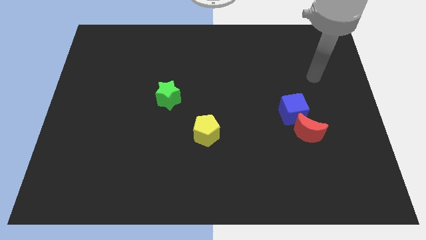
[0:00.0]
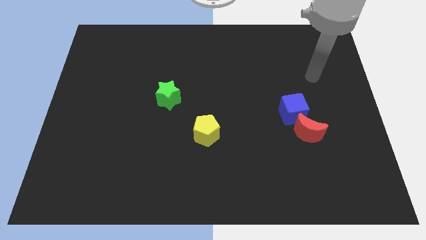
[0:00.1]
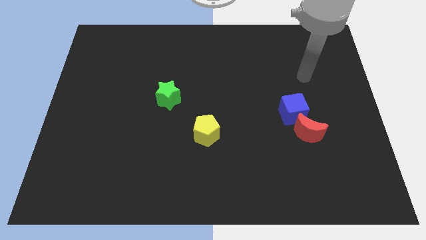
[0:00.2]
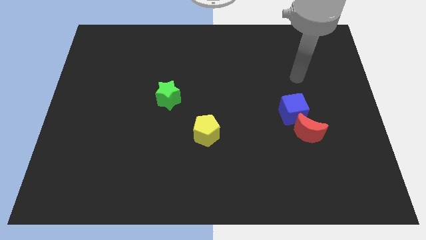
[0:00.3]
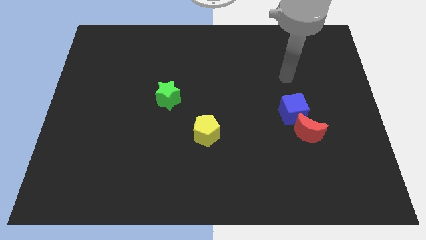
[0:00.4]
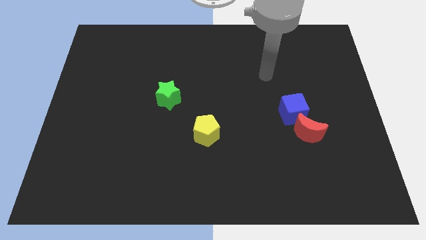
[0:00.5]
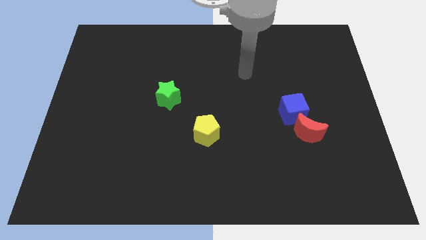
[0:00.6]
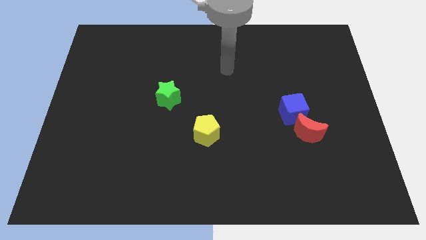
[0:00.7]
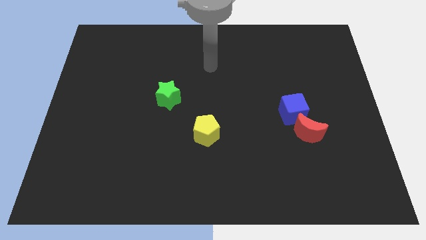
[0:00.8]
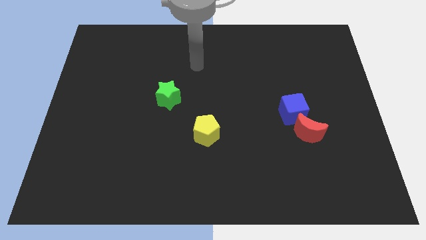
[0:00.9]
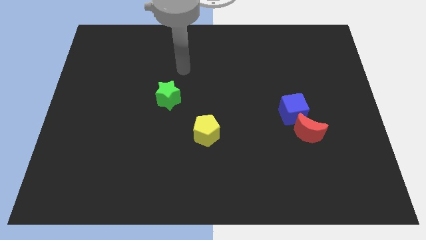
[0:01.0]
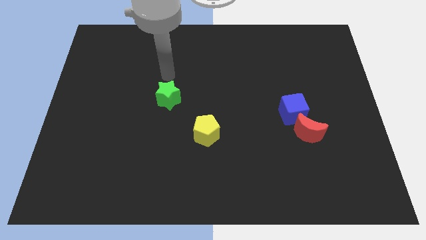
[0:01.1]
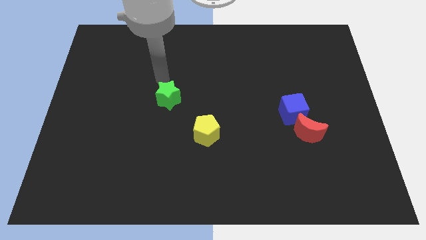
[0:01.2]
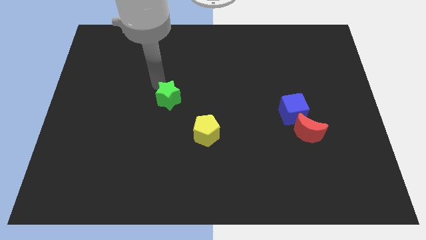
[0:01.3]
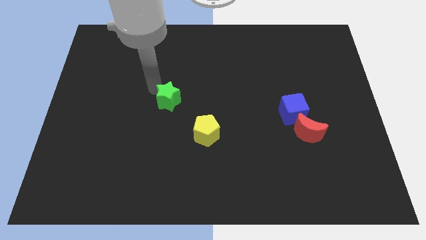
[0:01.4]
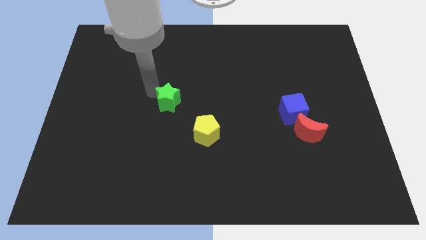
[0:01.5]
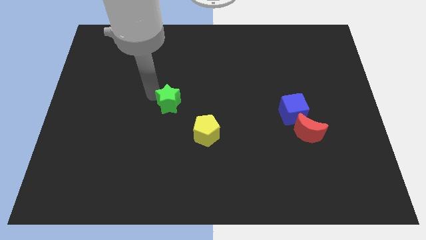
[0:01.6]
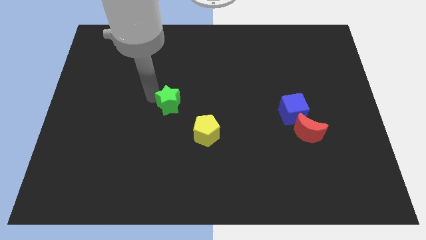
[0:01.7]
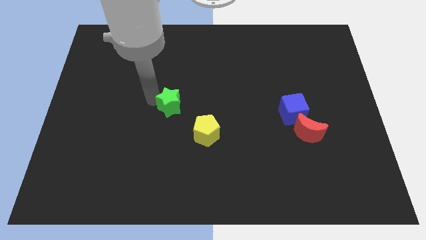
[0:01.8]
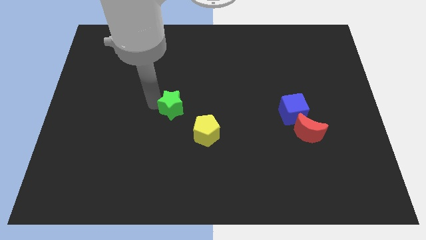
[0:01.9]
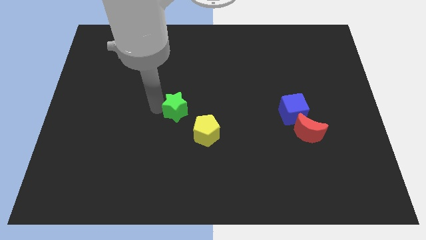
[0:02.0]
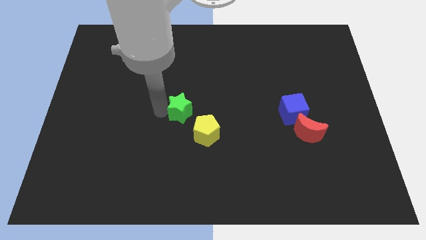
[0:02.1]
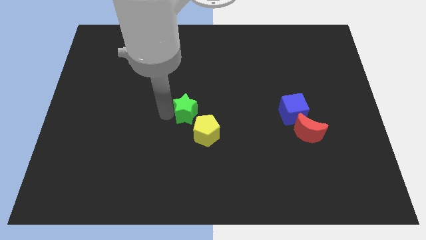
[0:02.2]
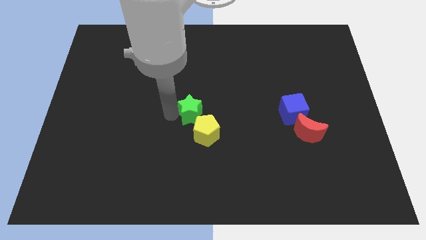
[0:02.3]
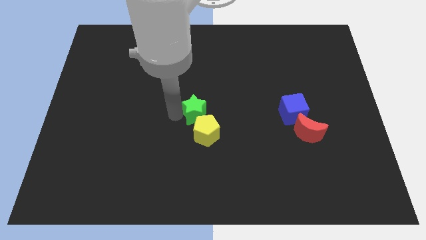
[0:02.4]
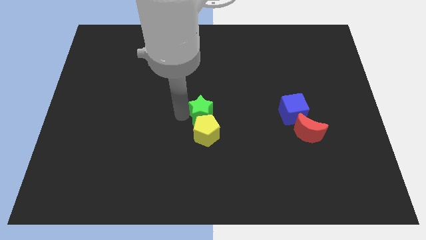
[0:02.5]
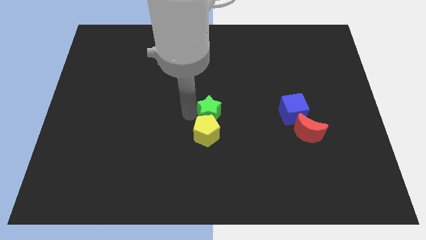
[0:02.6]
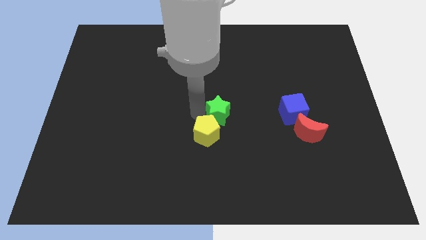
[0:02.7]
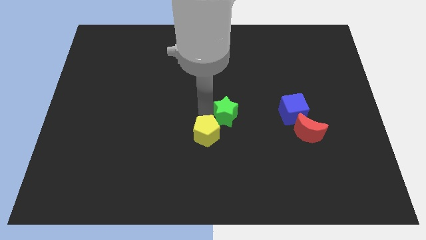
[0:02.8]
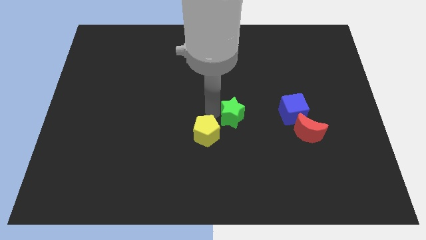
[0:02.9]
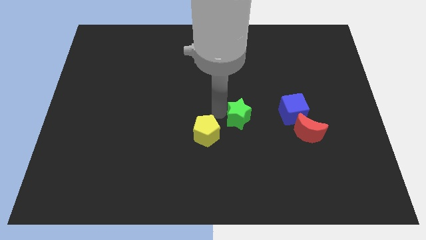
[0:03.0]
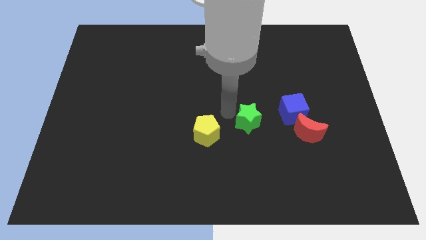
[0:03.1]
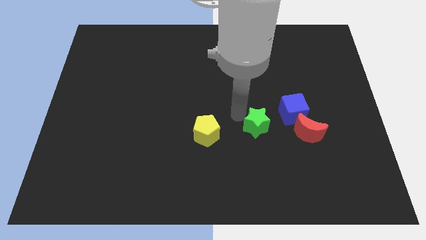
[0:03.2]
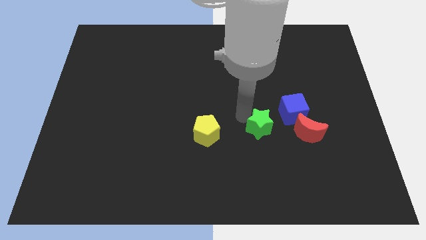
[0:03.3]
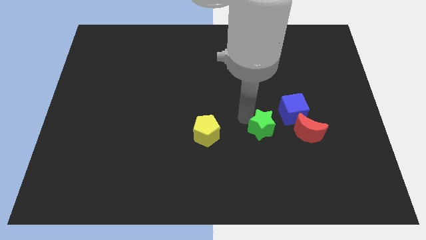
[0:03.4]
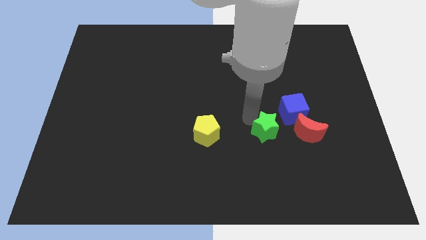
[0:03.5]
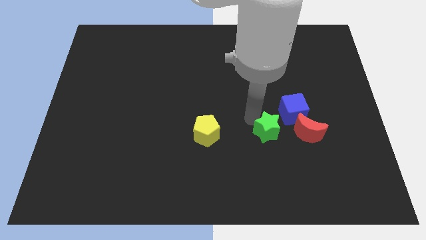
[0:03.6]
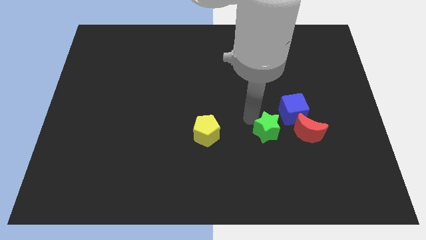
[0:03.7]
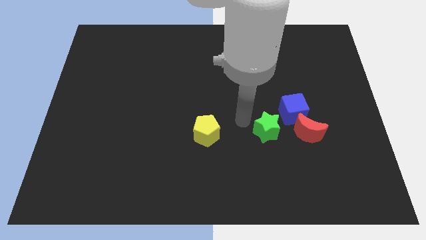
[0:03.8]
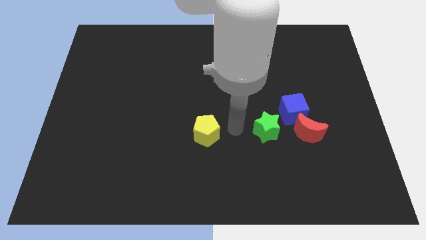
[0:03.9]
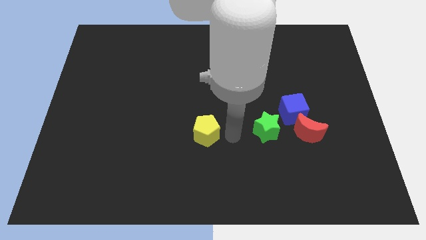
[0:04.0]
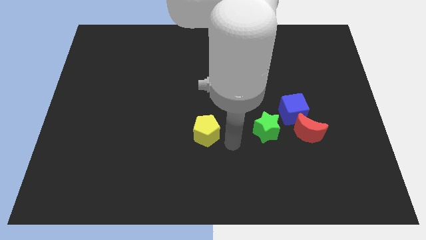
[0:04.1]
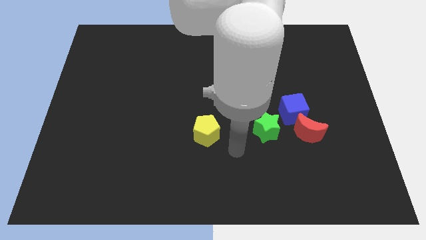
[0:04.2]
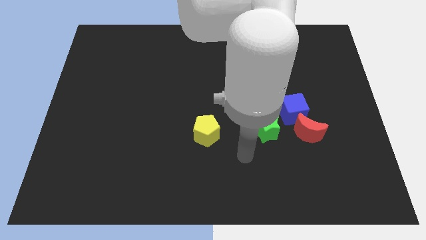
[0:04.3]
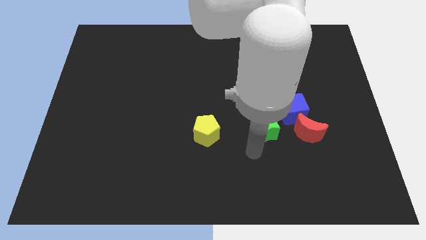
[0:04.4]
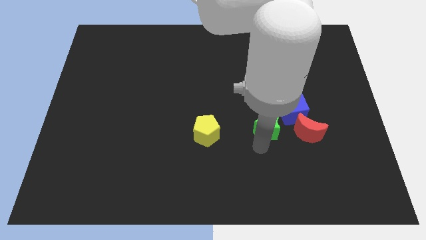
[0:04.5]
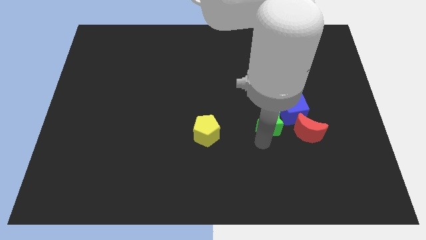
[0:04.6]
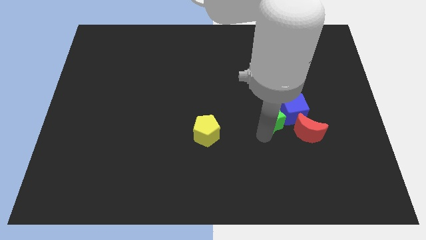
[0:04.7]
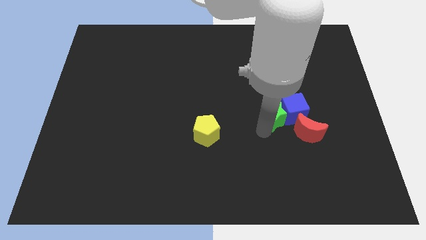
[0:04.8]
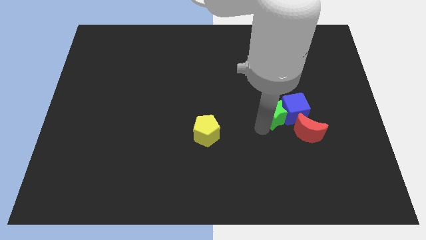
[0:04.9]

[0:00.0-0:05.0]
push the green block towards the blue cube

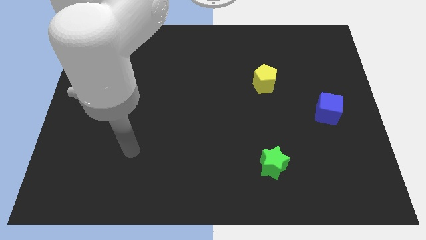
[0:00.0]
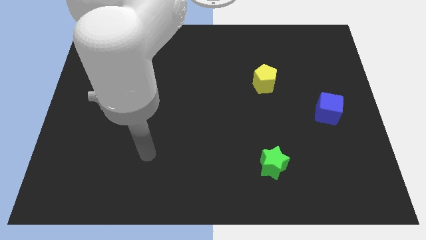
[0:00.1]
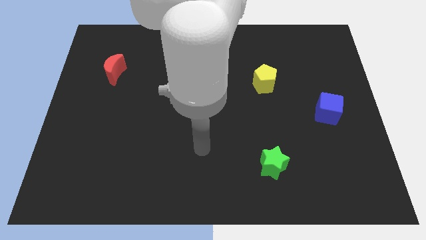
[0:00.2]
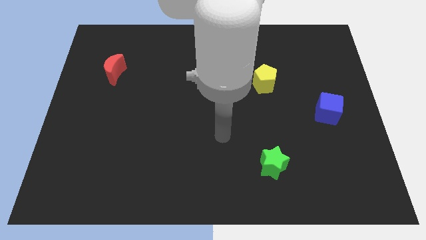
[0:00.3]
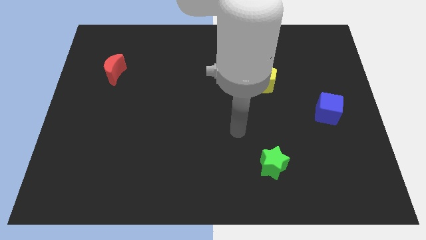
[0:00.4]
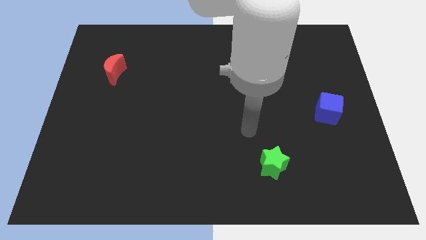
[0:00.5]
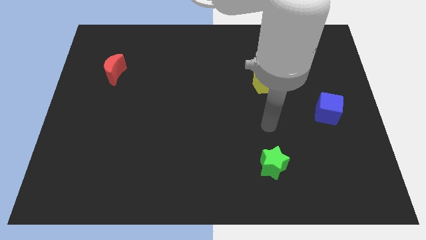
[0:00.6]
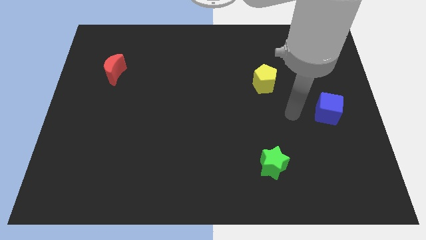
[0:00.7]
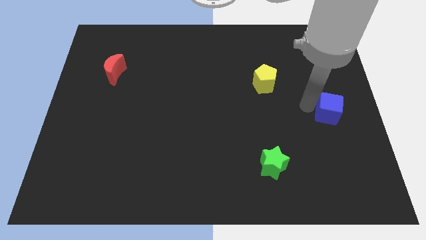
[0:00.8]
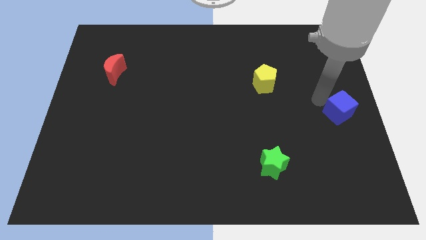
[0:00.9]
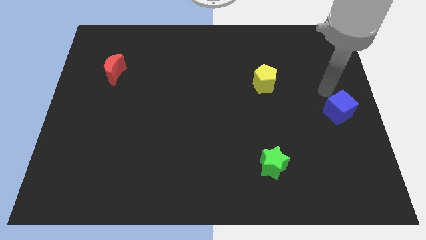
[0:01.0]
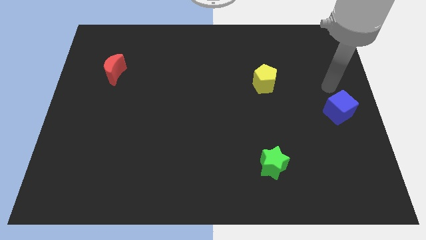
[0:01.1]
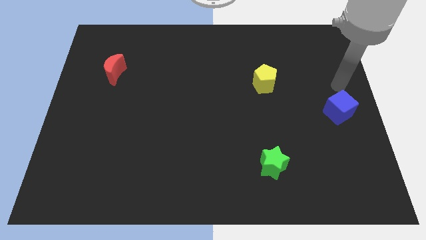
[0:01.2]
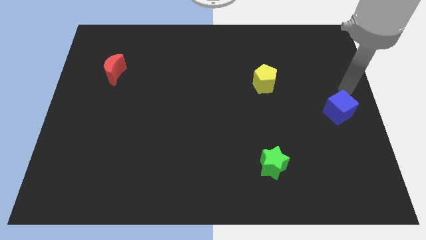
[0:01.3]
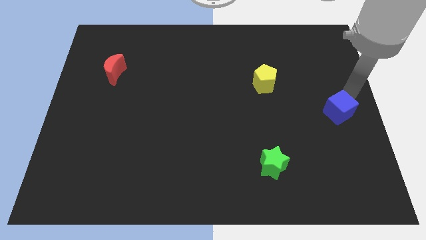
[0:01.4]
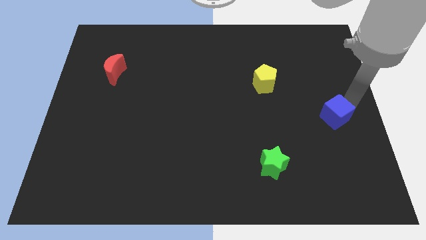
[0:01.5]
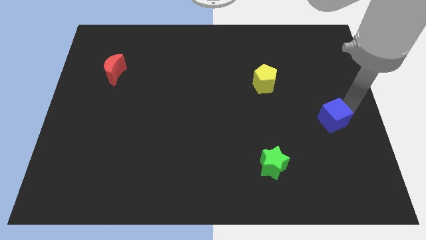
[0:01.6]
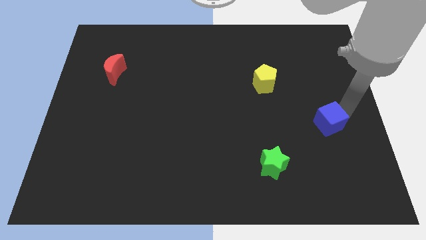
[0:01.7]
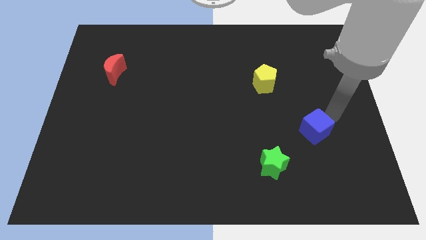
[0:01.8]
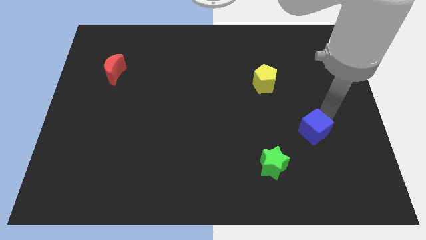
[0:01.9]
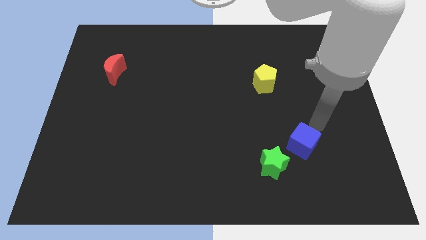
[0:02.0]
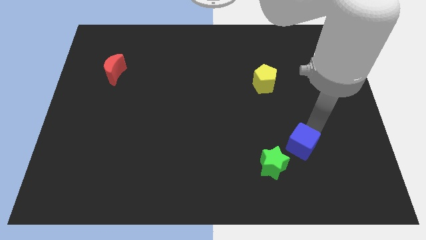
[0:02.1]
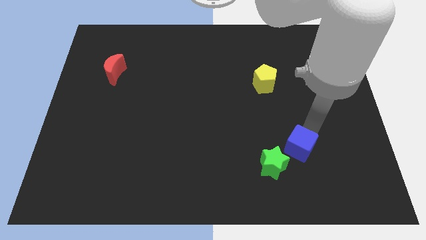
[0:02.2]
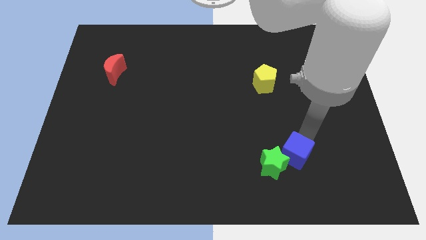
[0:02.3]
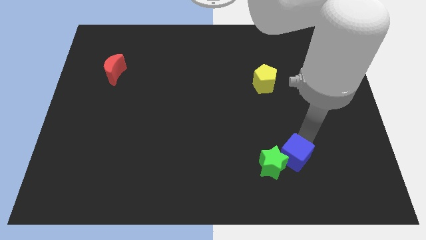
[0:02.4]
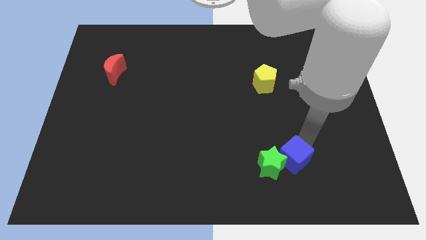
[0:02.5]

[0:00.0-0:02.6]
push the blue block next to the green block

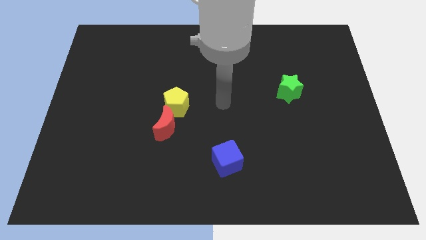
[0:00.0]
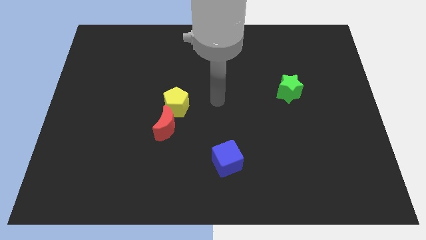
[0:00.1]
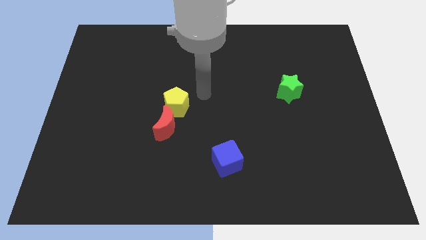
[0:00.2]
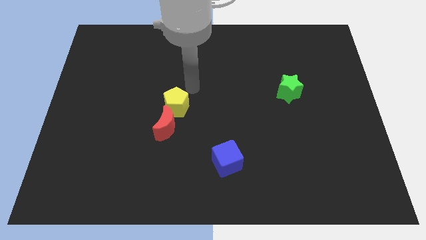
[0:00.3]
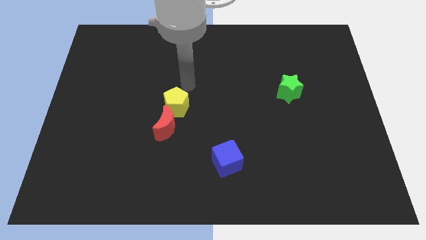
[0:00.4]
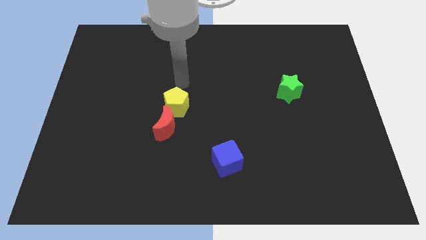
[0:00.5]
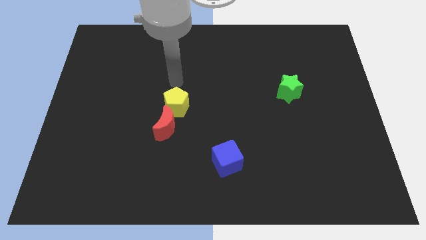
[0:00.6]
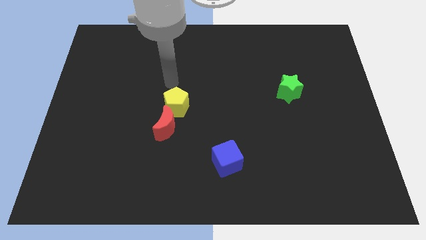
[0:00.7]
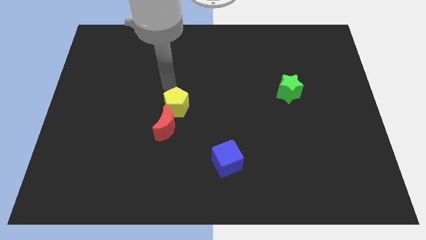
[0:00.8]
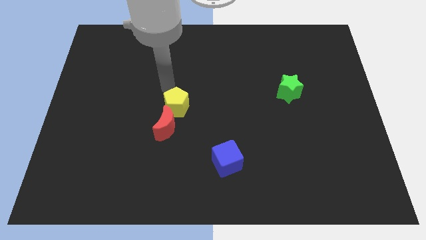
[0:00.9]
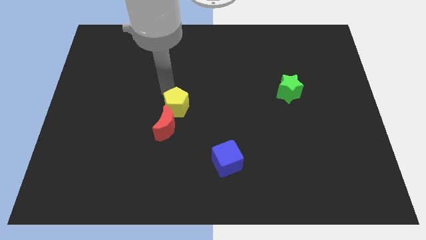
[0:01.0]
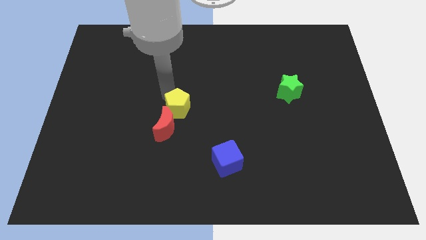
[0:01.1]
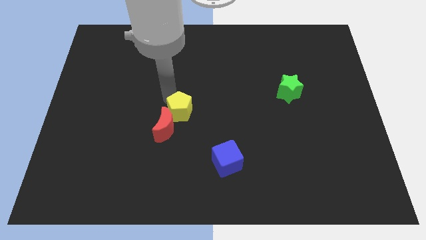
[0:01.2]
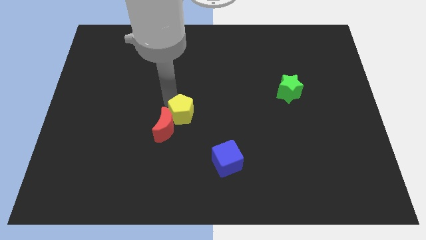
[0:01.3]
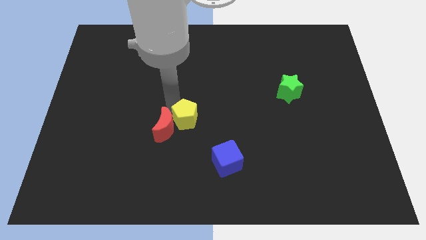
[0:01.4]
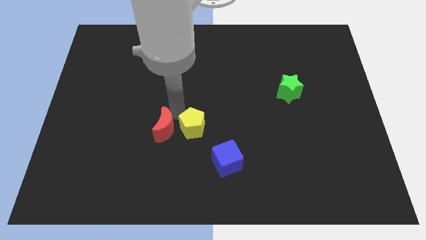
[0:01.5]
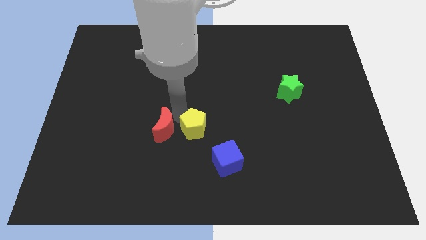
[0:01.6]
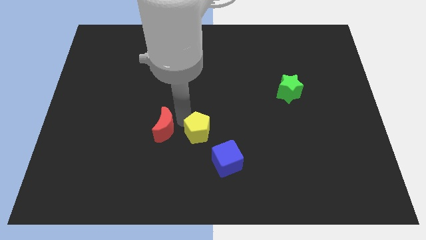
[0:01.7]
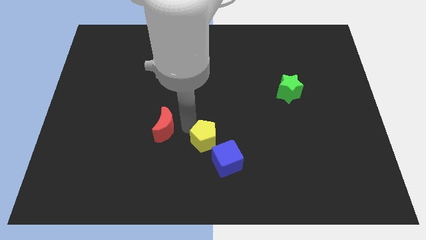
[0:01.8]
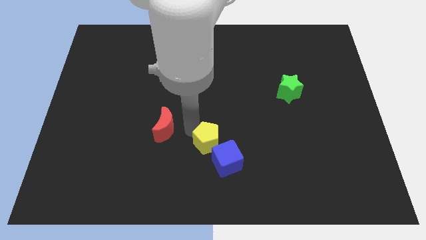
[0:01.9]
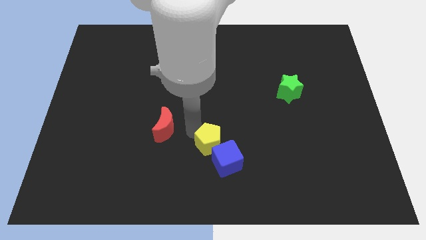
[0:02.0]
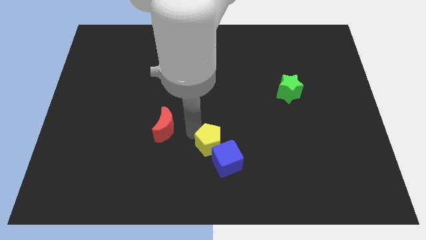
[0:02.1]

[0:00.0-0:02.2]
slide the yellow pentagon close to the blue cube
